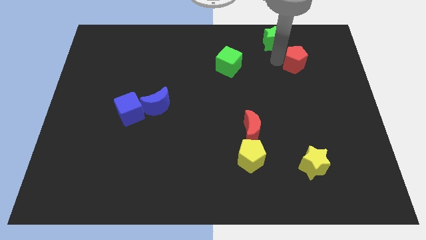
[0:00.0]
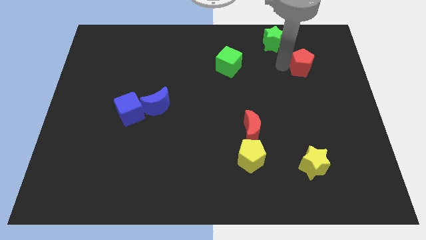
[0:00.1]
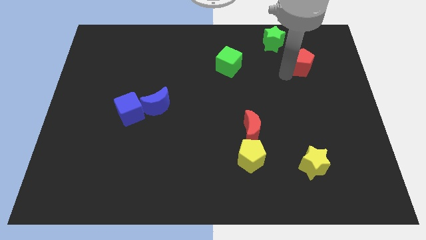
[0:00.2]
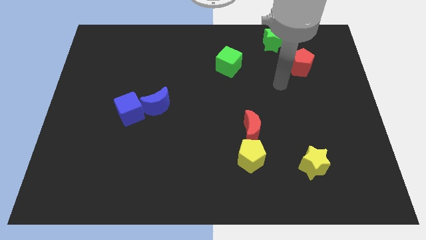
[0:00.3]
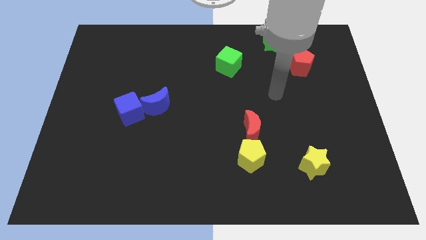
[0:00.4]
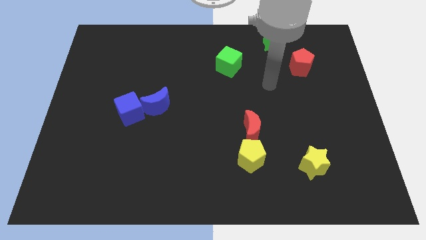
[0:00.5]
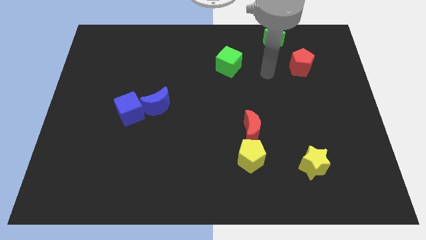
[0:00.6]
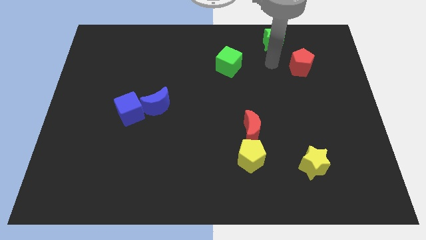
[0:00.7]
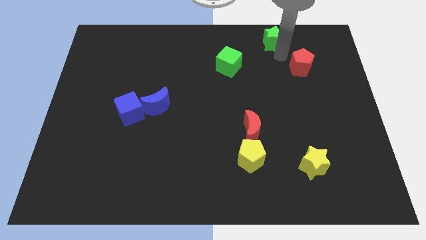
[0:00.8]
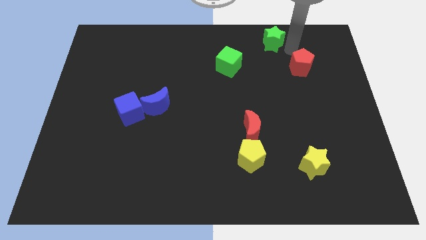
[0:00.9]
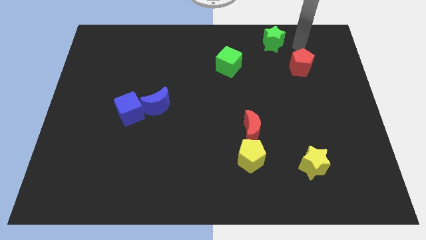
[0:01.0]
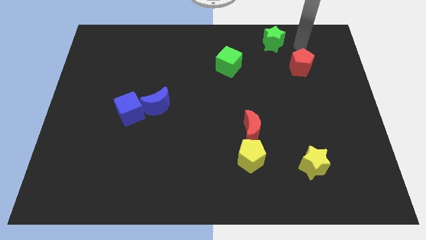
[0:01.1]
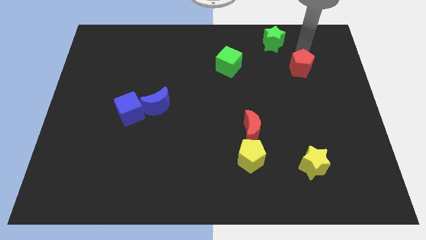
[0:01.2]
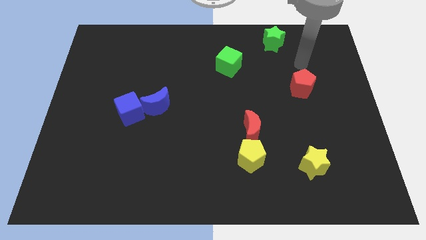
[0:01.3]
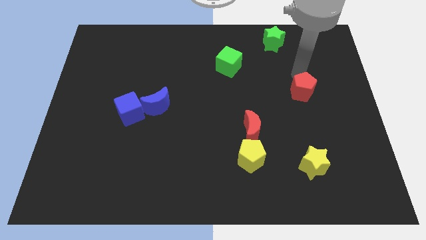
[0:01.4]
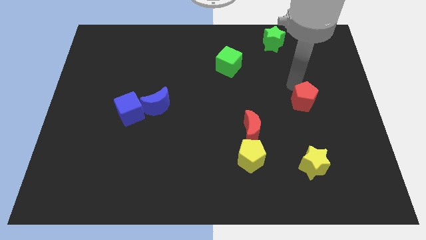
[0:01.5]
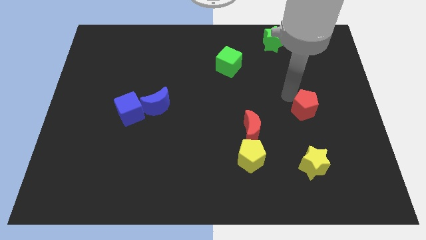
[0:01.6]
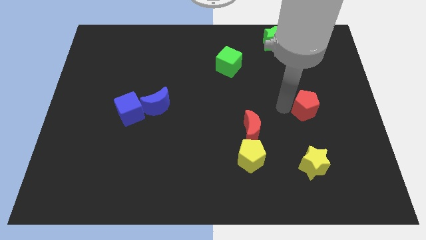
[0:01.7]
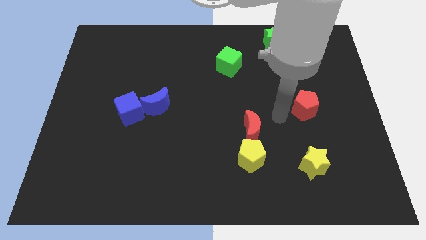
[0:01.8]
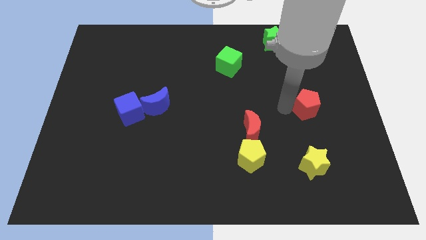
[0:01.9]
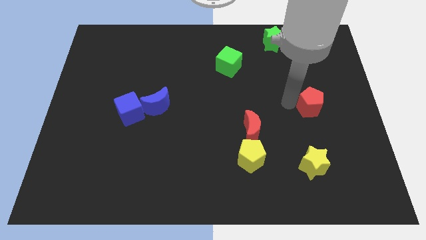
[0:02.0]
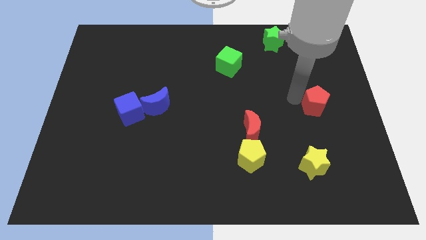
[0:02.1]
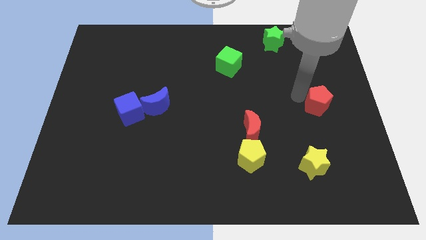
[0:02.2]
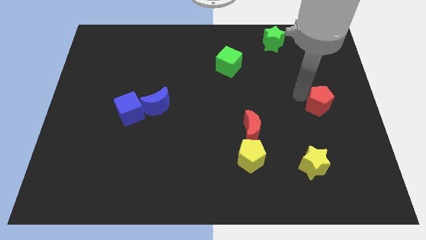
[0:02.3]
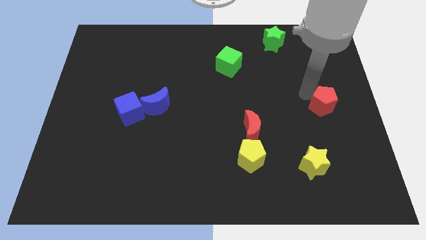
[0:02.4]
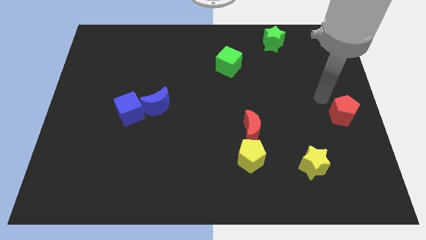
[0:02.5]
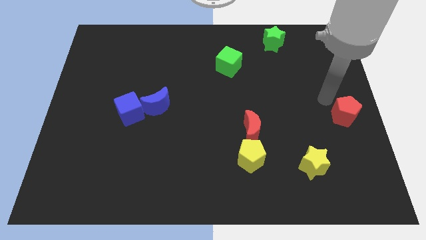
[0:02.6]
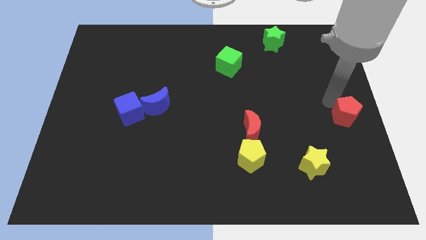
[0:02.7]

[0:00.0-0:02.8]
move the red pentagon to the top right of the yellow star

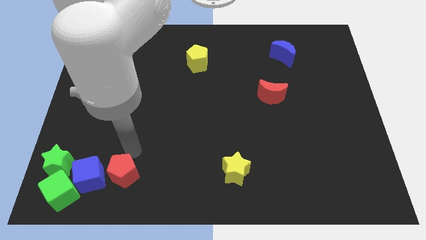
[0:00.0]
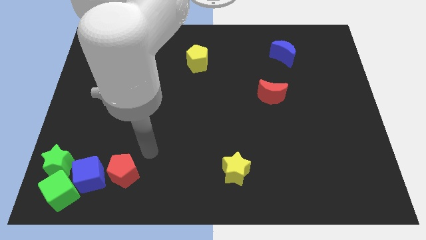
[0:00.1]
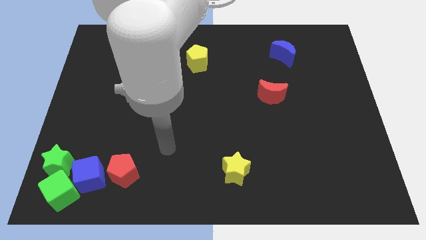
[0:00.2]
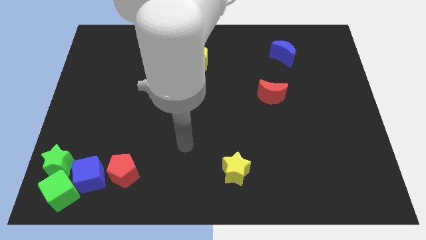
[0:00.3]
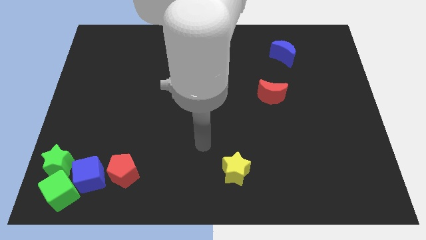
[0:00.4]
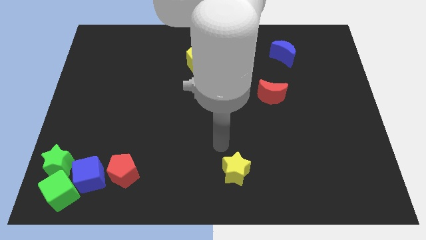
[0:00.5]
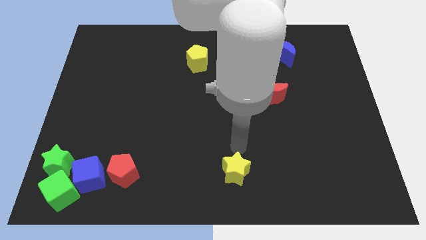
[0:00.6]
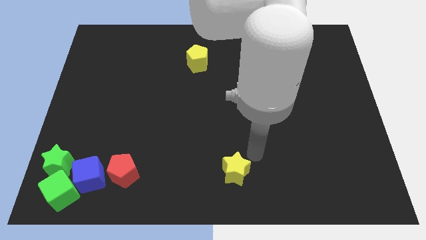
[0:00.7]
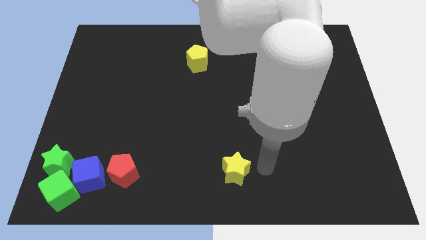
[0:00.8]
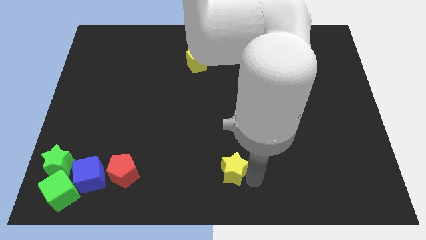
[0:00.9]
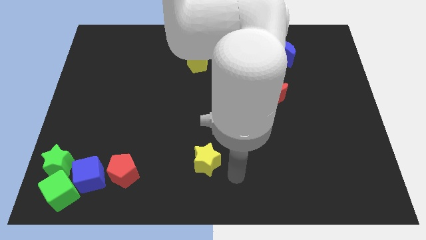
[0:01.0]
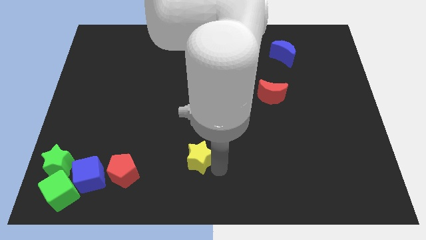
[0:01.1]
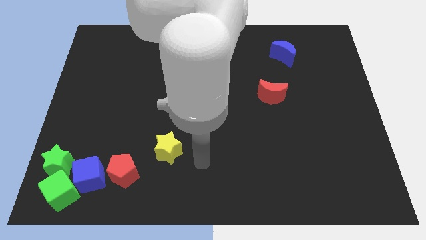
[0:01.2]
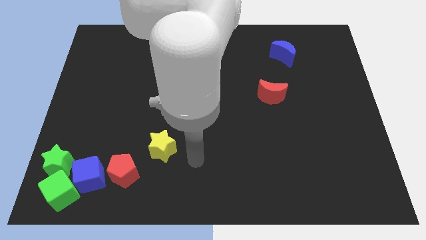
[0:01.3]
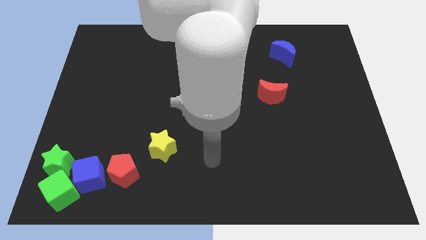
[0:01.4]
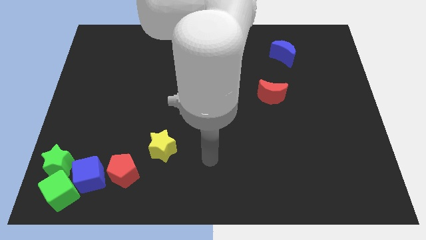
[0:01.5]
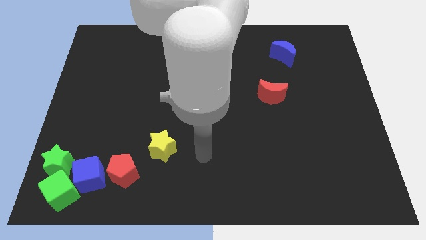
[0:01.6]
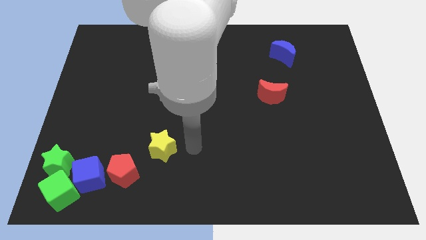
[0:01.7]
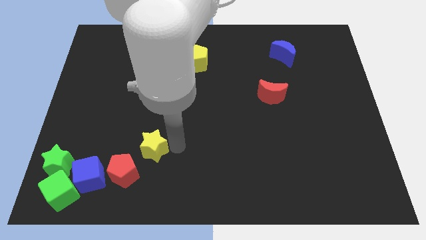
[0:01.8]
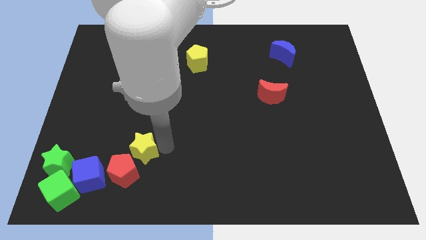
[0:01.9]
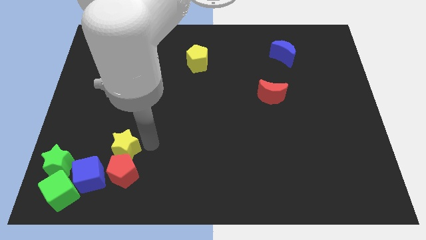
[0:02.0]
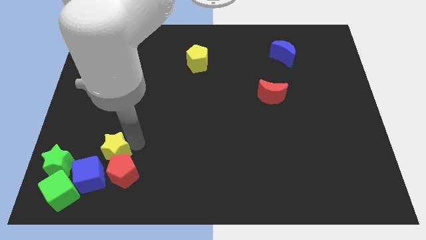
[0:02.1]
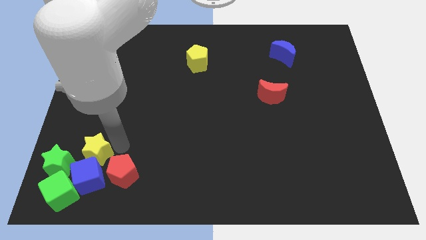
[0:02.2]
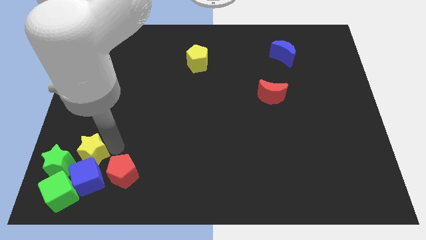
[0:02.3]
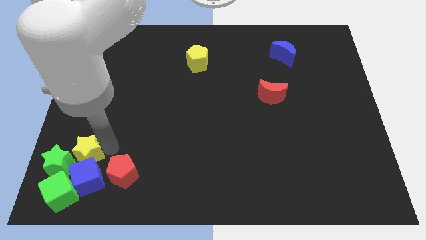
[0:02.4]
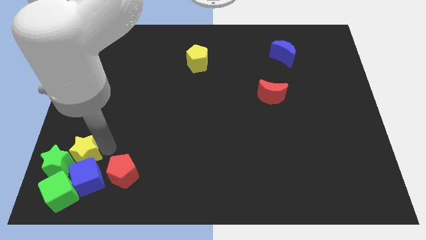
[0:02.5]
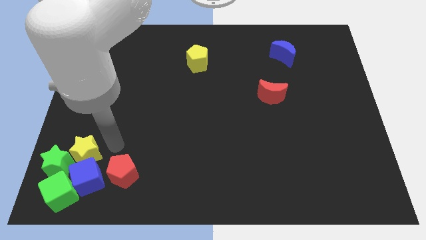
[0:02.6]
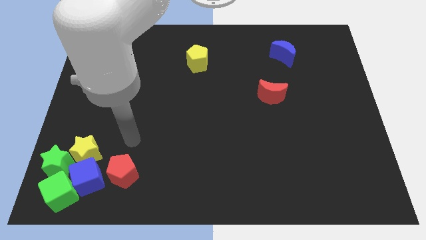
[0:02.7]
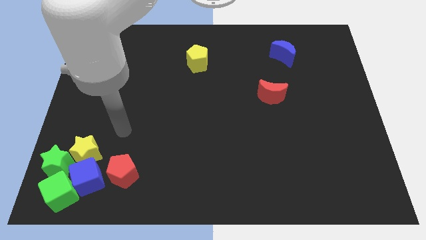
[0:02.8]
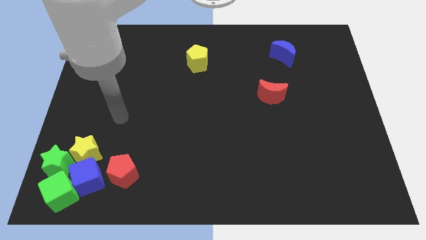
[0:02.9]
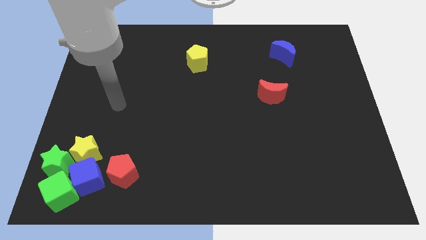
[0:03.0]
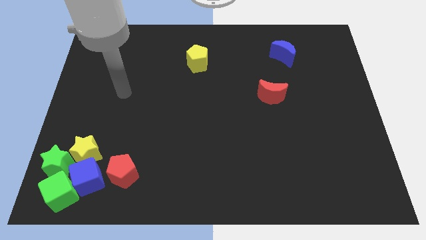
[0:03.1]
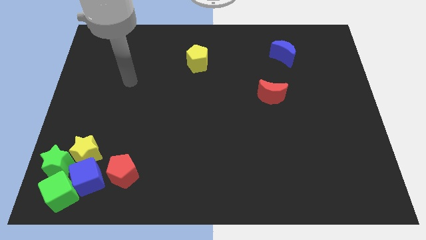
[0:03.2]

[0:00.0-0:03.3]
move the yellow star above to the blue cube

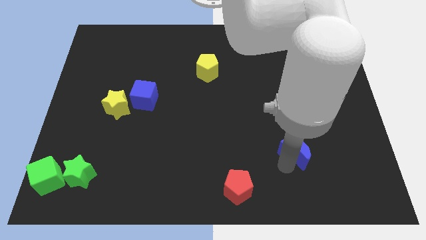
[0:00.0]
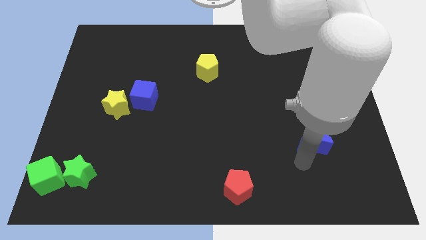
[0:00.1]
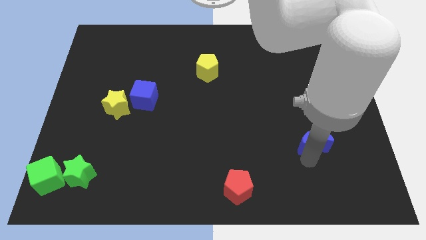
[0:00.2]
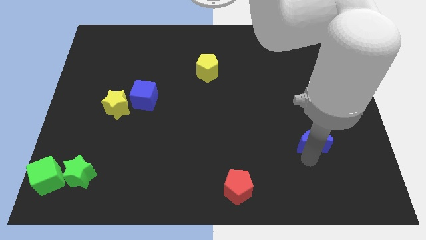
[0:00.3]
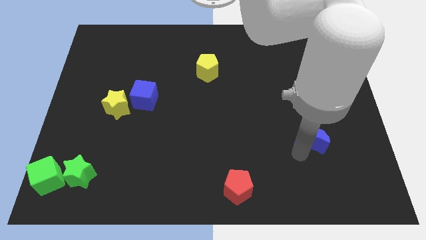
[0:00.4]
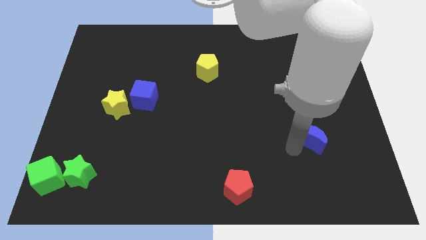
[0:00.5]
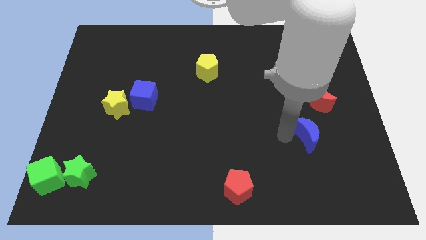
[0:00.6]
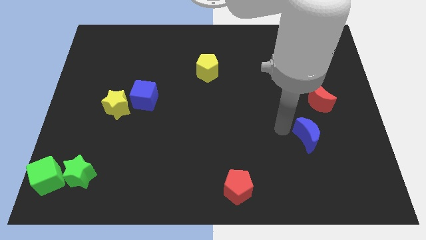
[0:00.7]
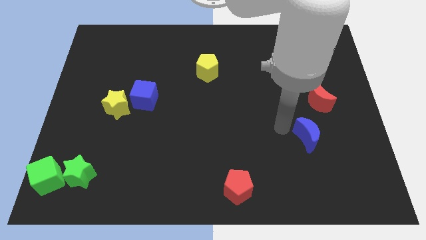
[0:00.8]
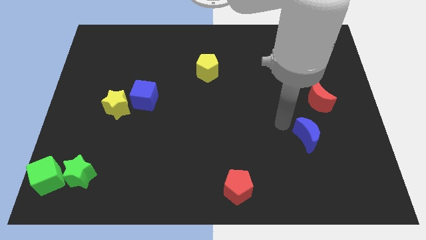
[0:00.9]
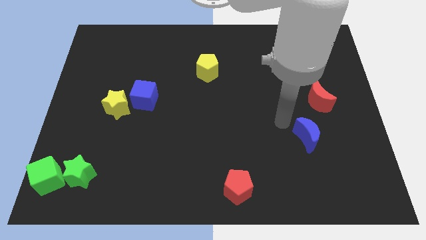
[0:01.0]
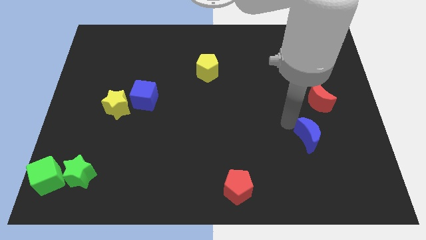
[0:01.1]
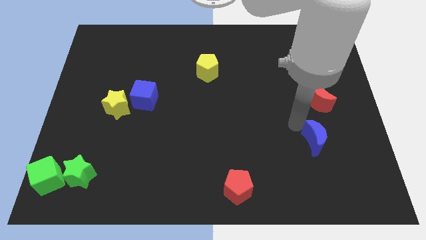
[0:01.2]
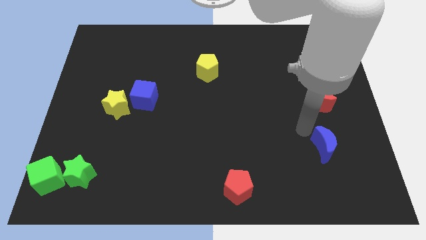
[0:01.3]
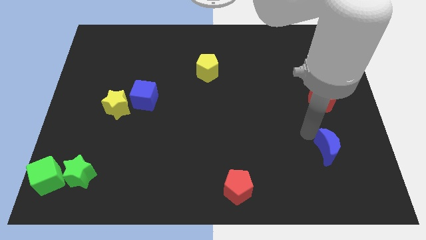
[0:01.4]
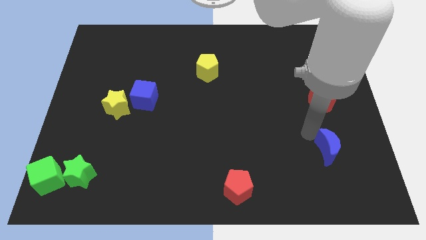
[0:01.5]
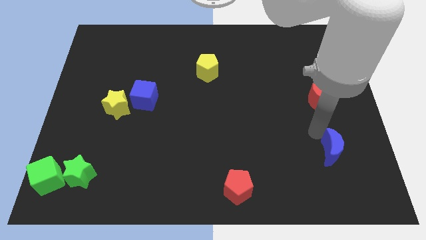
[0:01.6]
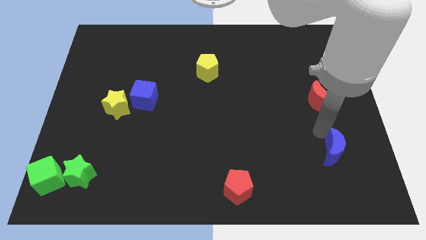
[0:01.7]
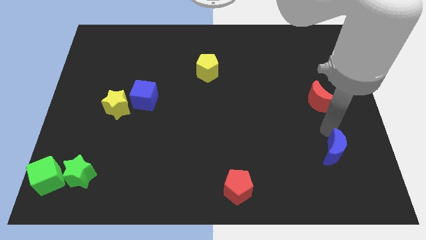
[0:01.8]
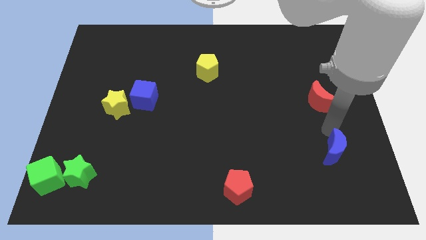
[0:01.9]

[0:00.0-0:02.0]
place blue moon to the bottom of red moon

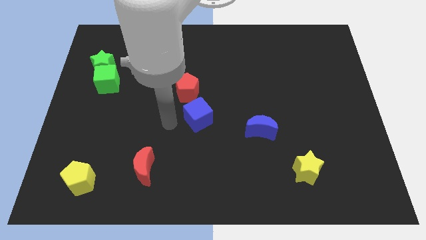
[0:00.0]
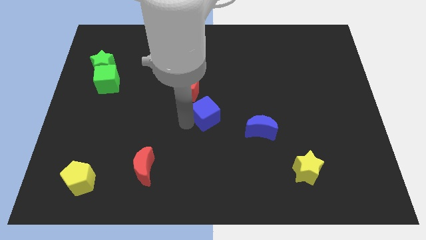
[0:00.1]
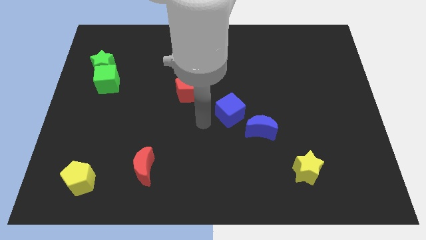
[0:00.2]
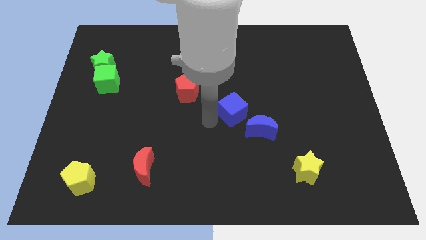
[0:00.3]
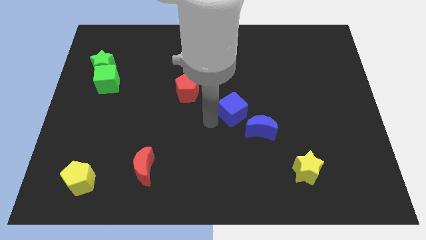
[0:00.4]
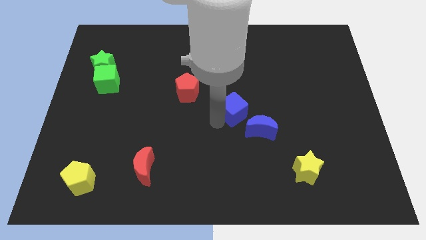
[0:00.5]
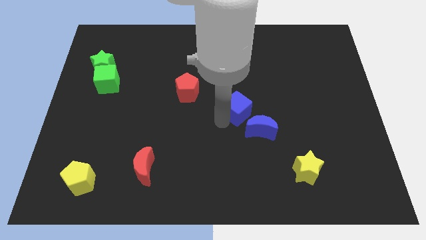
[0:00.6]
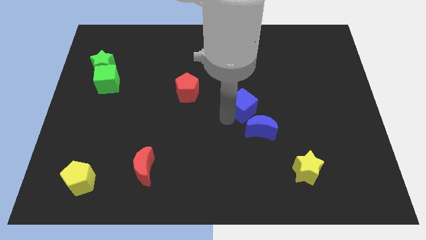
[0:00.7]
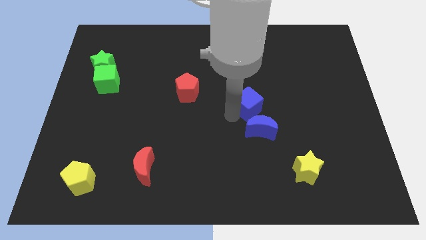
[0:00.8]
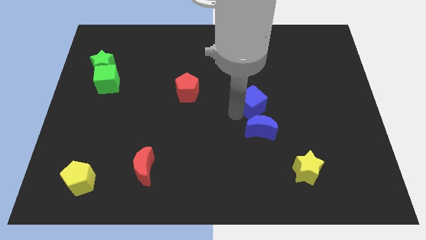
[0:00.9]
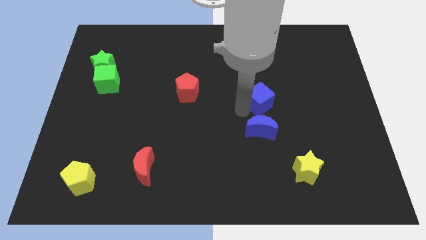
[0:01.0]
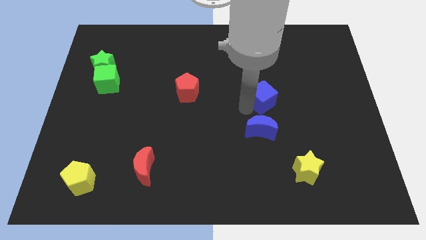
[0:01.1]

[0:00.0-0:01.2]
push the blue cube to the top of the blue crescent
